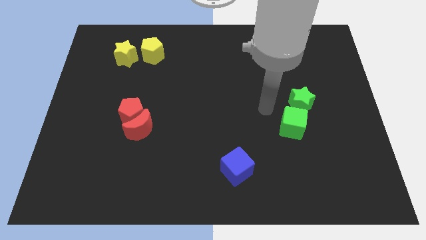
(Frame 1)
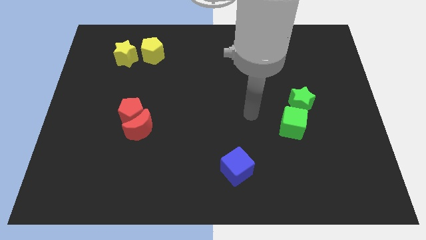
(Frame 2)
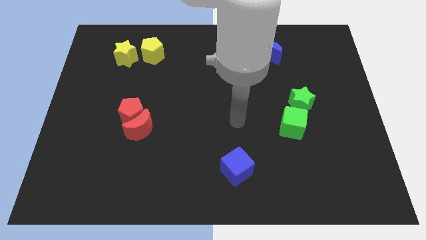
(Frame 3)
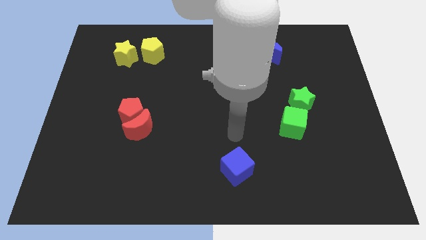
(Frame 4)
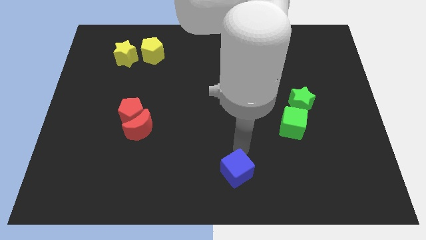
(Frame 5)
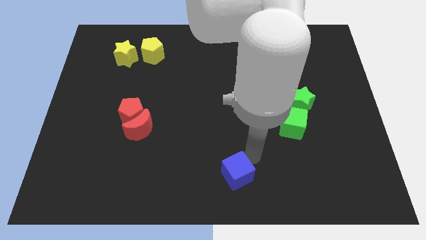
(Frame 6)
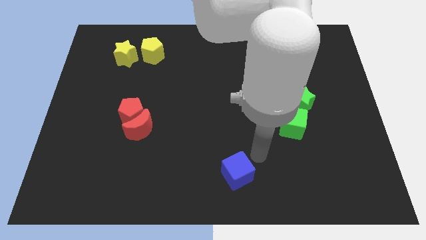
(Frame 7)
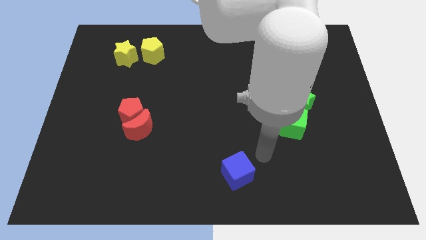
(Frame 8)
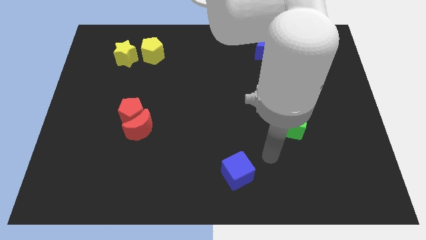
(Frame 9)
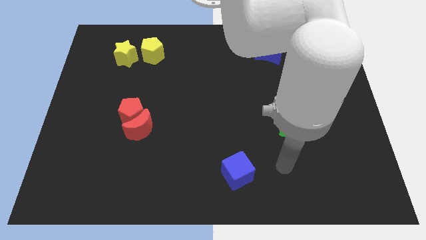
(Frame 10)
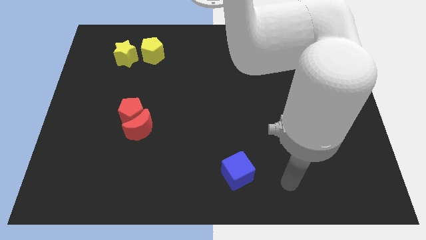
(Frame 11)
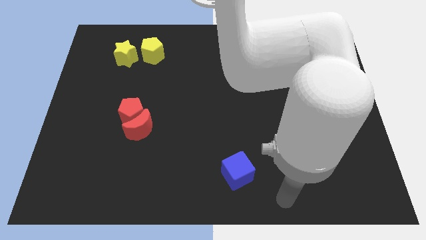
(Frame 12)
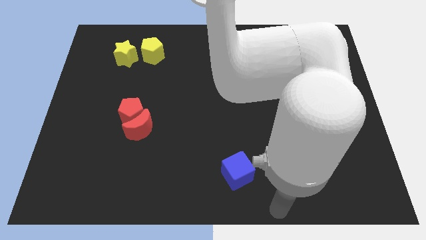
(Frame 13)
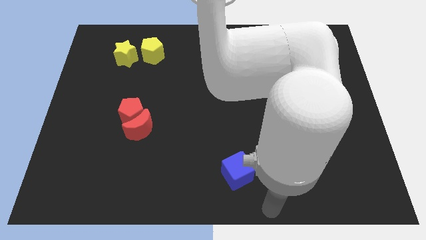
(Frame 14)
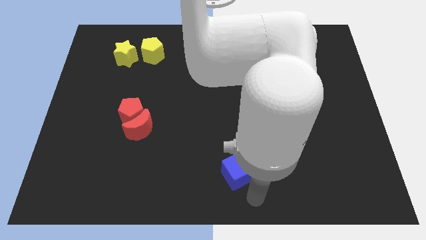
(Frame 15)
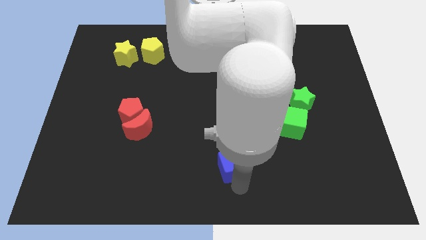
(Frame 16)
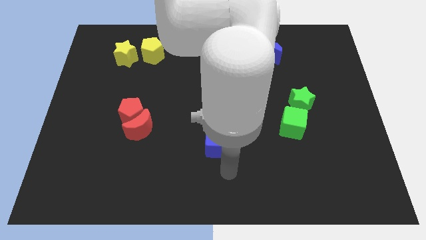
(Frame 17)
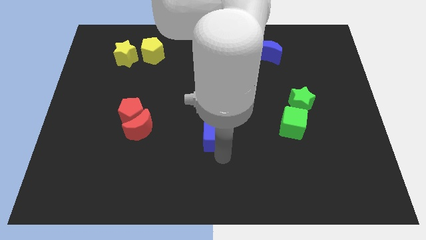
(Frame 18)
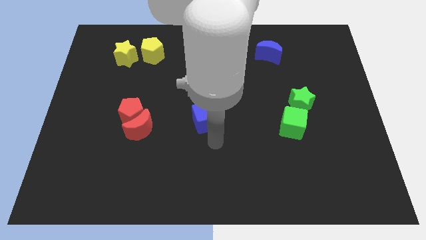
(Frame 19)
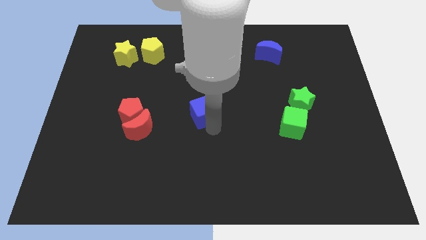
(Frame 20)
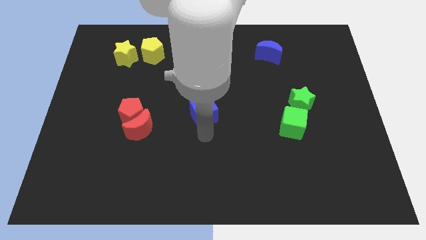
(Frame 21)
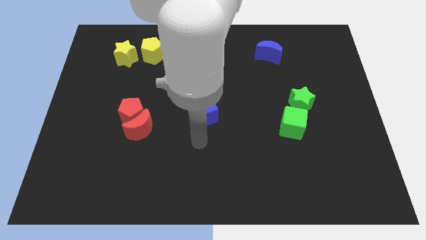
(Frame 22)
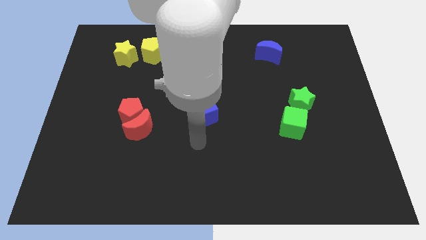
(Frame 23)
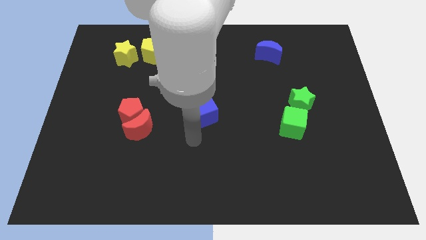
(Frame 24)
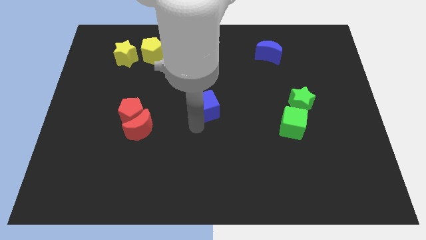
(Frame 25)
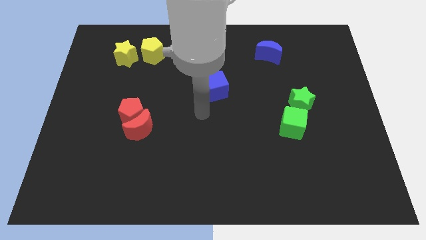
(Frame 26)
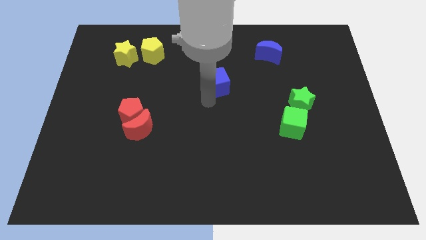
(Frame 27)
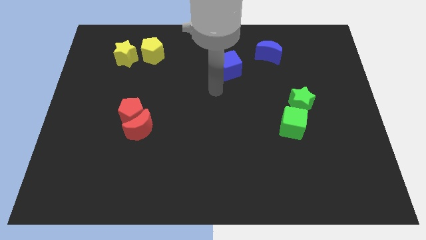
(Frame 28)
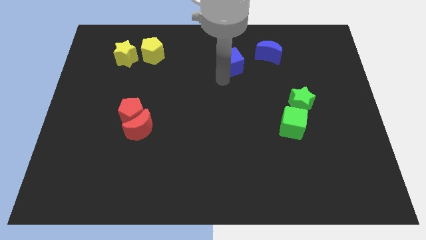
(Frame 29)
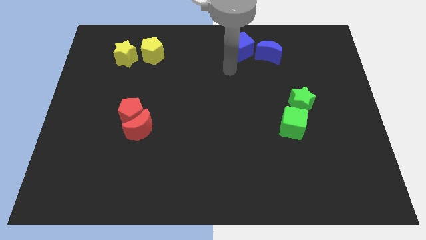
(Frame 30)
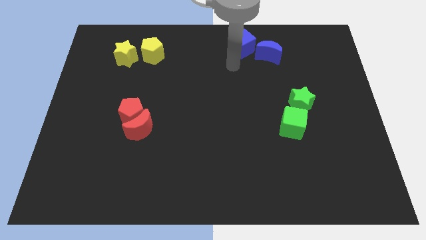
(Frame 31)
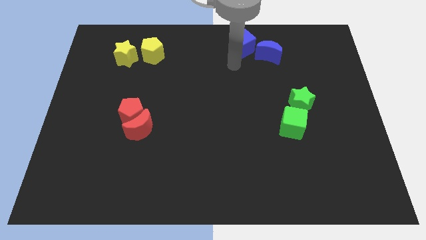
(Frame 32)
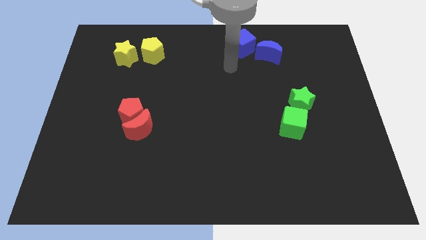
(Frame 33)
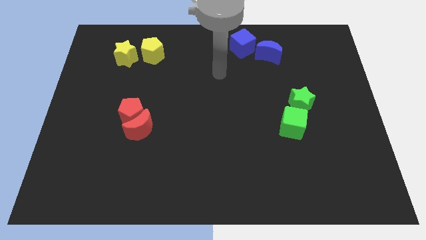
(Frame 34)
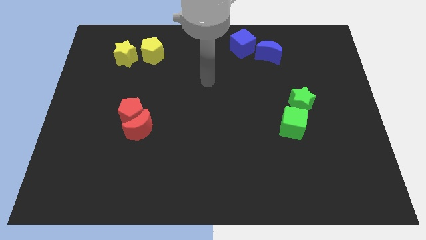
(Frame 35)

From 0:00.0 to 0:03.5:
place the blue cube on left side of blue moon

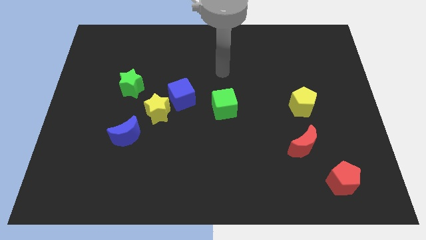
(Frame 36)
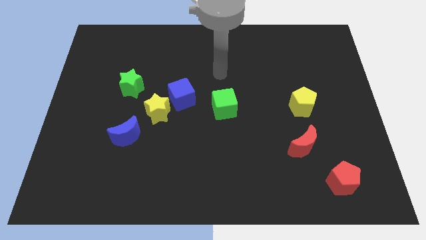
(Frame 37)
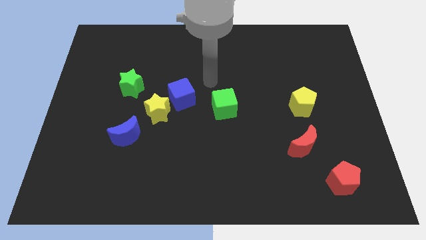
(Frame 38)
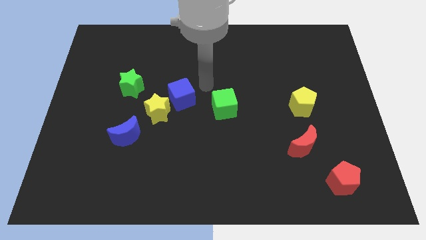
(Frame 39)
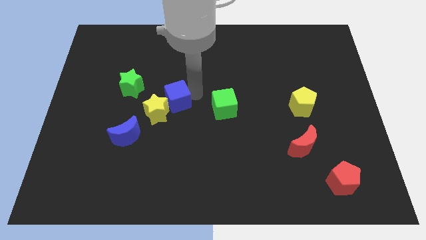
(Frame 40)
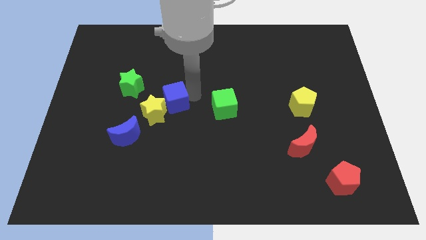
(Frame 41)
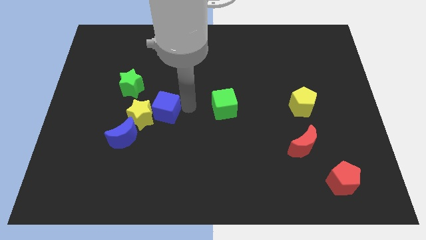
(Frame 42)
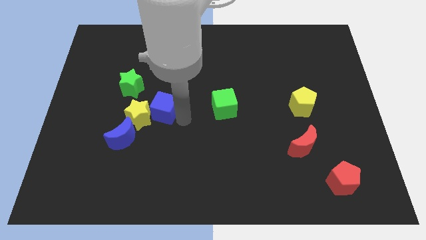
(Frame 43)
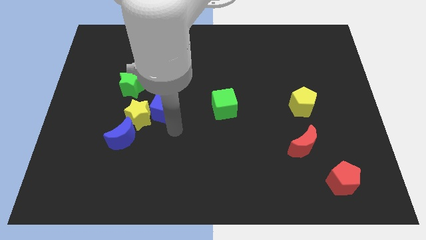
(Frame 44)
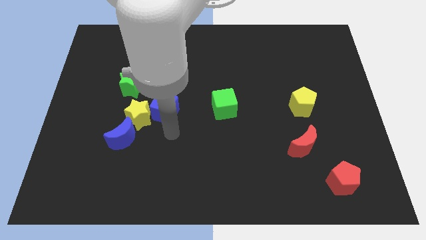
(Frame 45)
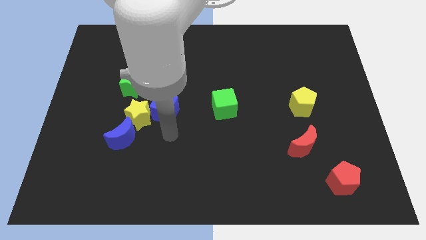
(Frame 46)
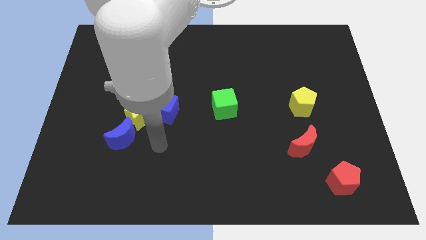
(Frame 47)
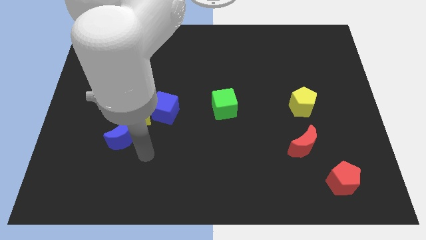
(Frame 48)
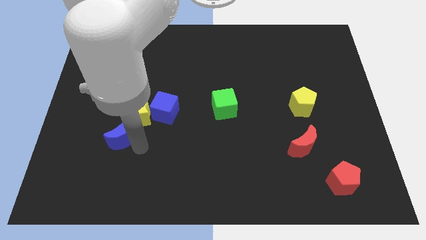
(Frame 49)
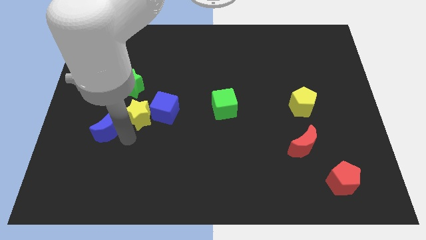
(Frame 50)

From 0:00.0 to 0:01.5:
push the blue crescent and yellow star with the blue cube towards the bottom left of the board

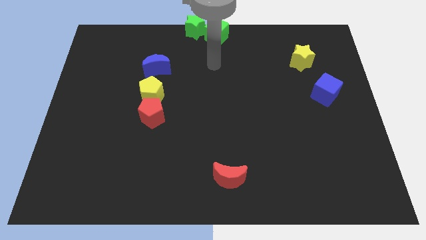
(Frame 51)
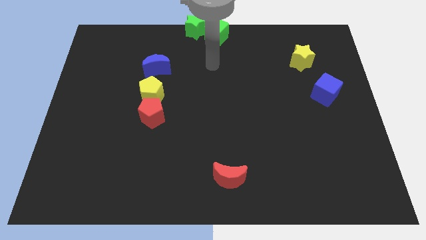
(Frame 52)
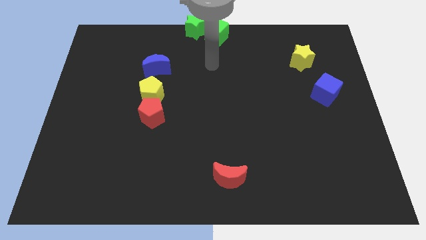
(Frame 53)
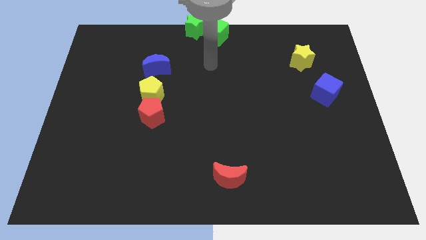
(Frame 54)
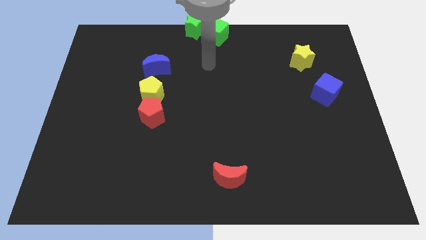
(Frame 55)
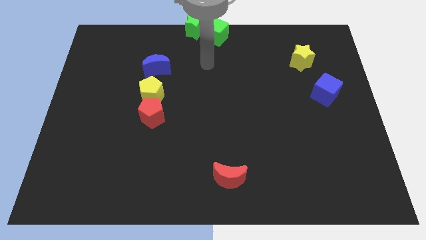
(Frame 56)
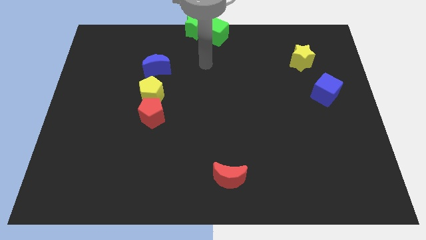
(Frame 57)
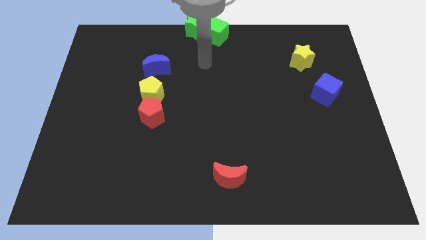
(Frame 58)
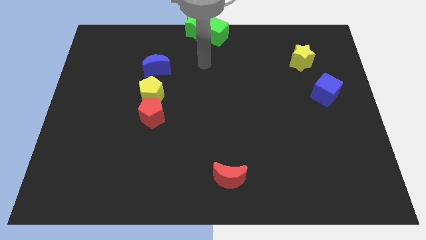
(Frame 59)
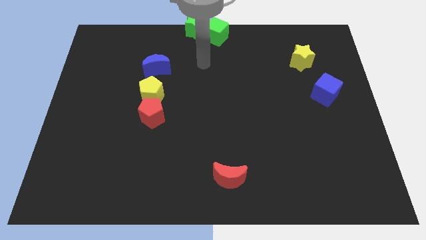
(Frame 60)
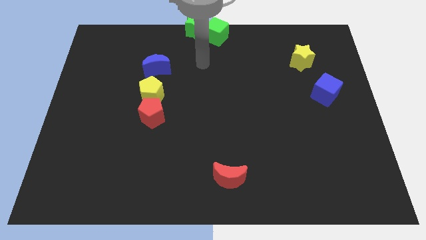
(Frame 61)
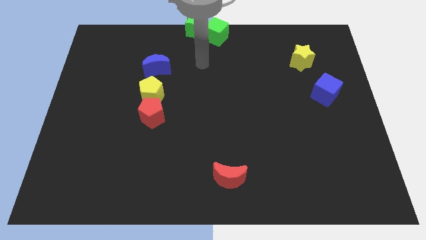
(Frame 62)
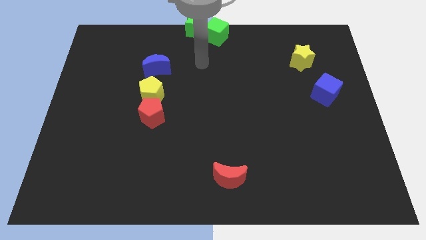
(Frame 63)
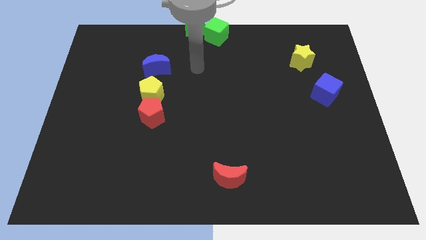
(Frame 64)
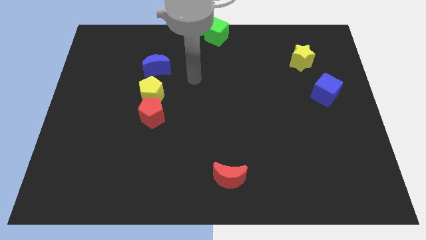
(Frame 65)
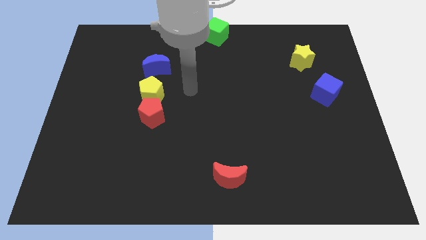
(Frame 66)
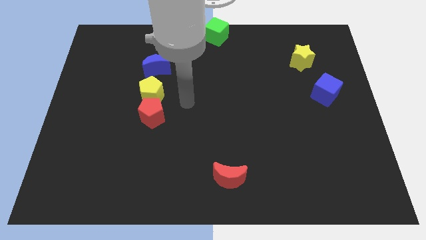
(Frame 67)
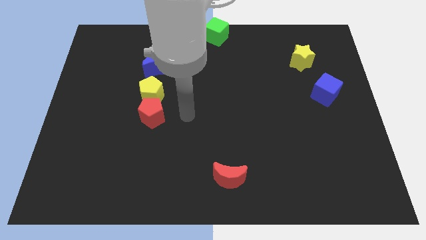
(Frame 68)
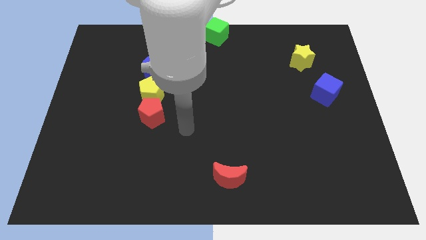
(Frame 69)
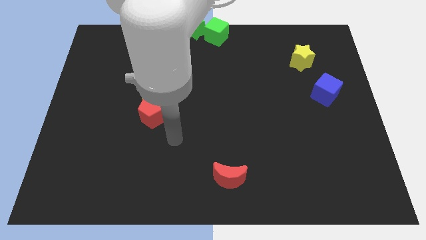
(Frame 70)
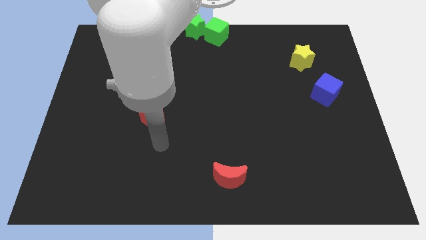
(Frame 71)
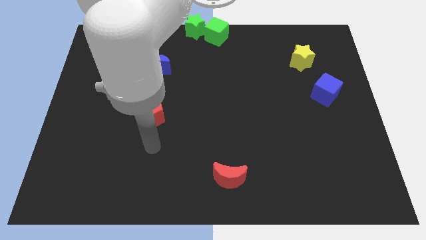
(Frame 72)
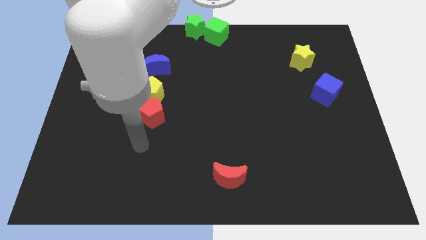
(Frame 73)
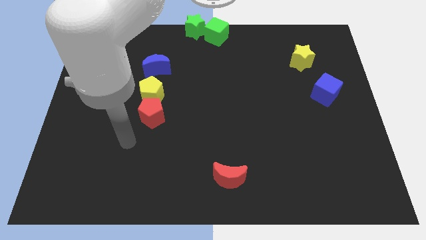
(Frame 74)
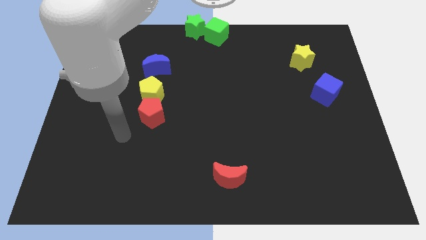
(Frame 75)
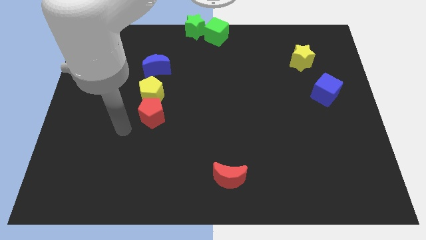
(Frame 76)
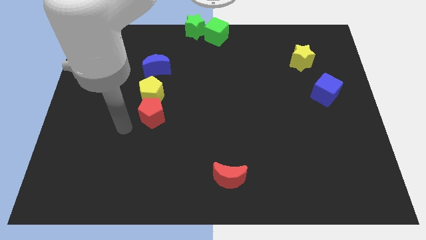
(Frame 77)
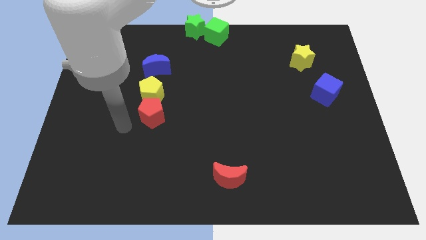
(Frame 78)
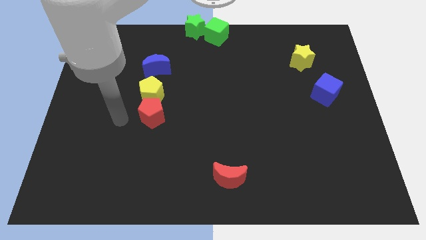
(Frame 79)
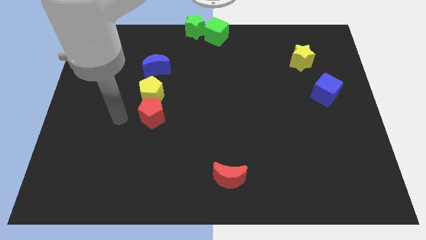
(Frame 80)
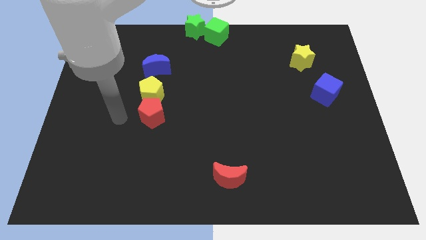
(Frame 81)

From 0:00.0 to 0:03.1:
place your arm at the left of the red pentagon

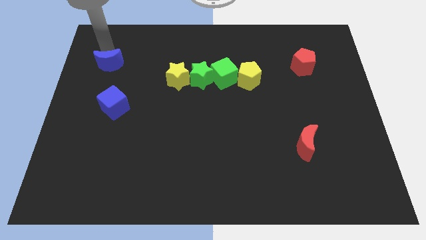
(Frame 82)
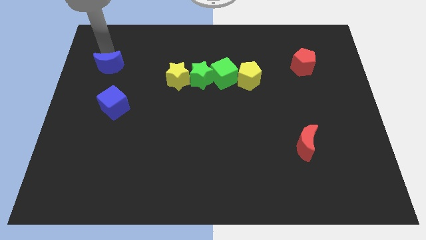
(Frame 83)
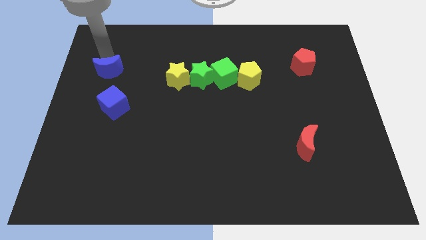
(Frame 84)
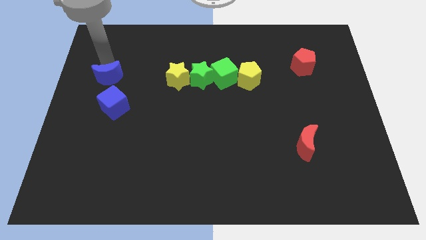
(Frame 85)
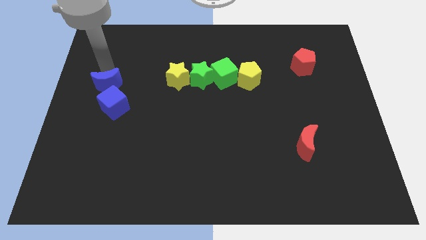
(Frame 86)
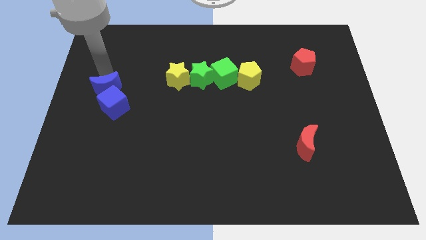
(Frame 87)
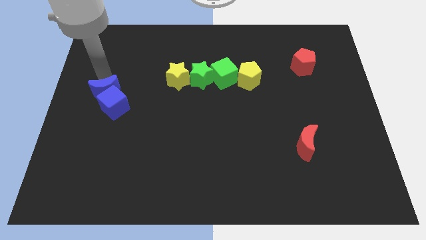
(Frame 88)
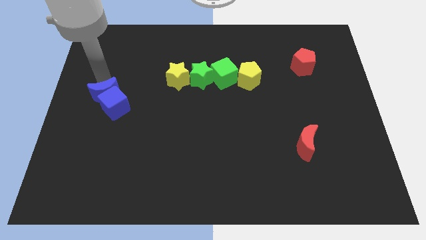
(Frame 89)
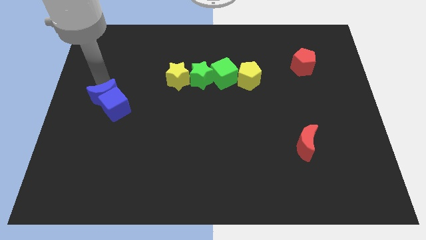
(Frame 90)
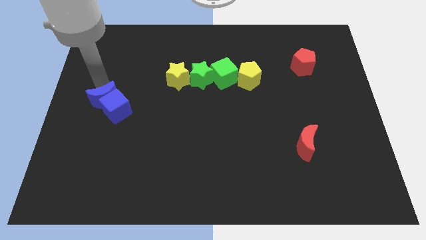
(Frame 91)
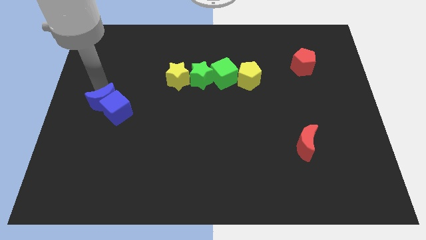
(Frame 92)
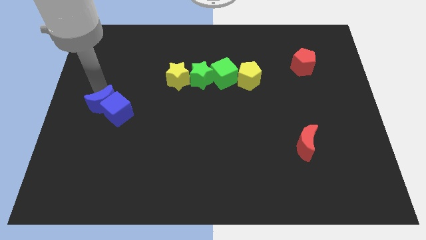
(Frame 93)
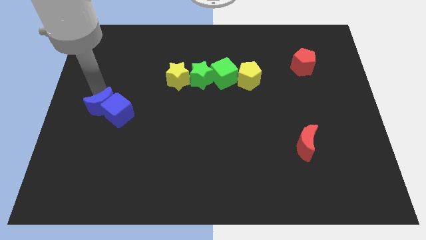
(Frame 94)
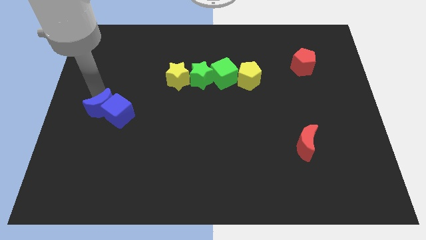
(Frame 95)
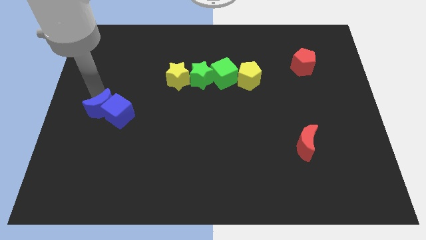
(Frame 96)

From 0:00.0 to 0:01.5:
push the blue crescent into the blue cube
